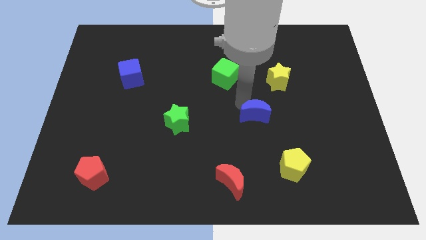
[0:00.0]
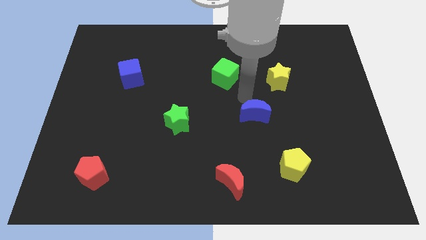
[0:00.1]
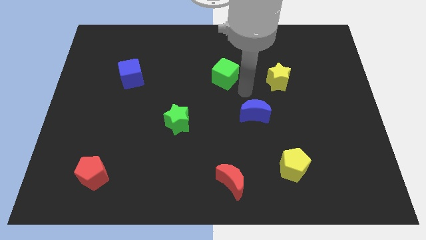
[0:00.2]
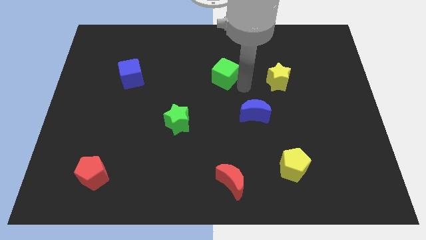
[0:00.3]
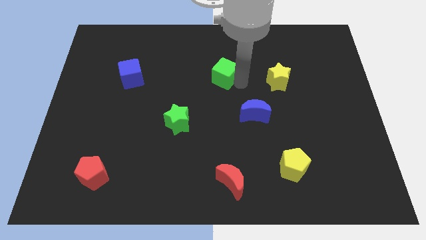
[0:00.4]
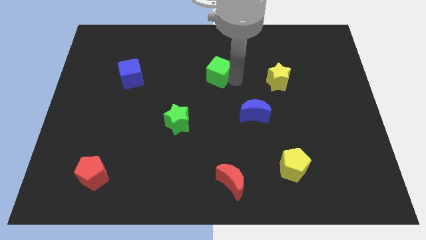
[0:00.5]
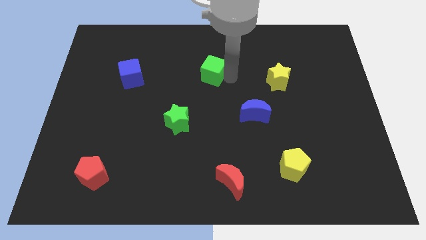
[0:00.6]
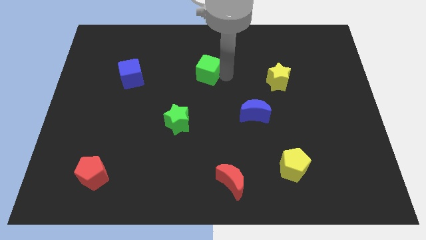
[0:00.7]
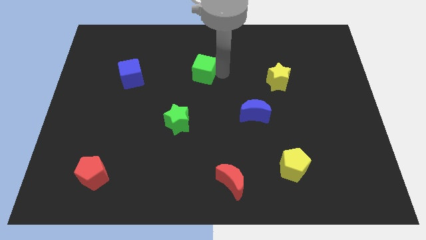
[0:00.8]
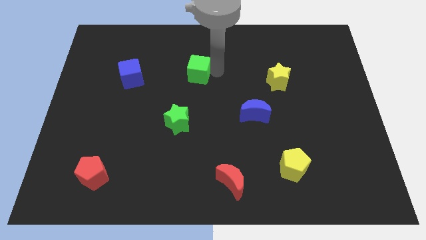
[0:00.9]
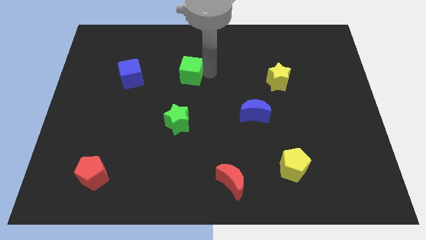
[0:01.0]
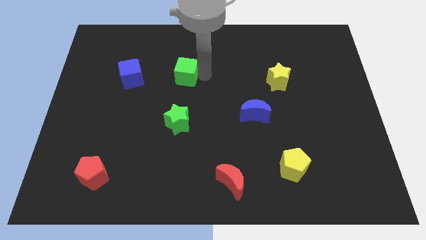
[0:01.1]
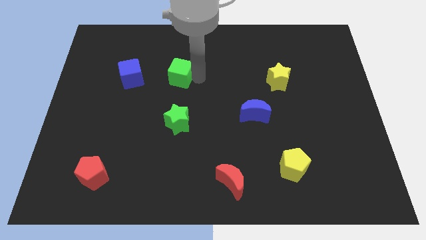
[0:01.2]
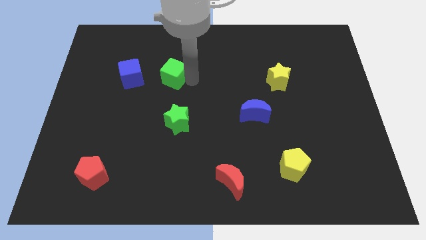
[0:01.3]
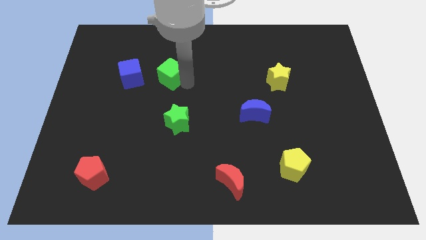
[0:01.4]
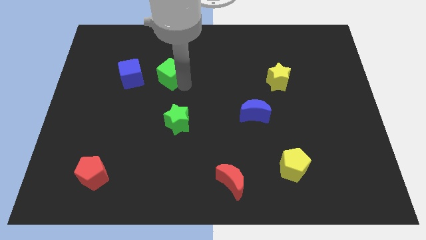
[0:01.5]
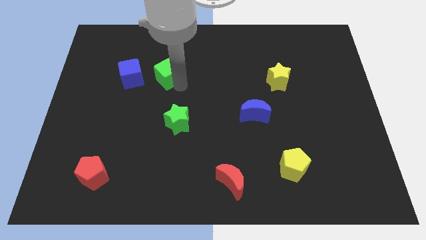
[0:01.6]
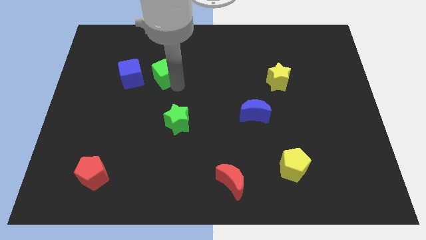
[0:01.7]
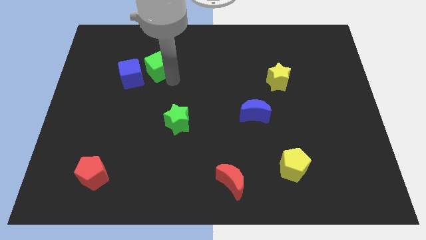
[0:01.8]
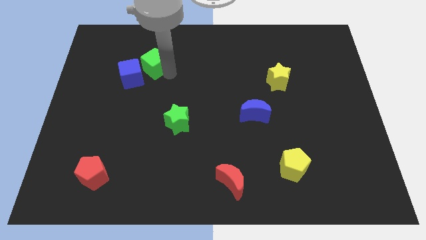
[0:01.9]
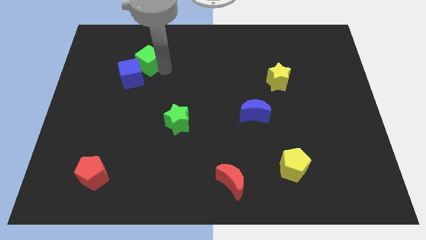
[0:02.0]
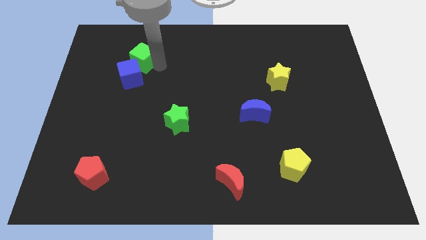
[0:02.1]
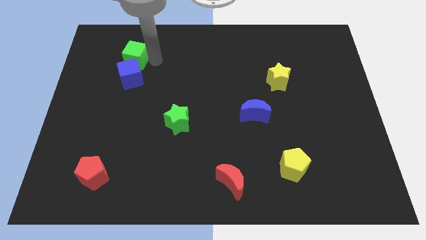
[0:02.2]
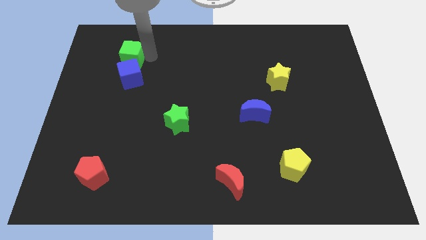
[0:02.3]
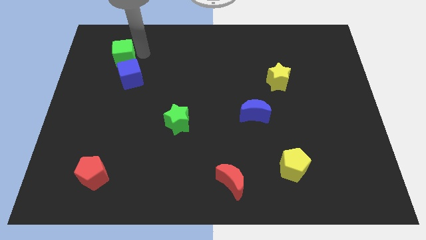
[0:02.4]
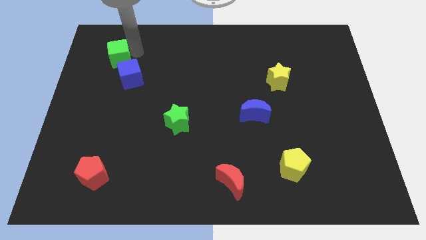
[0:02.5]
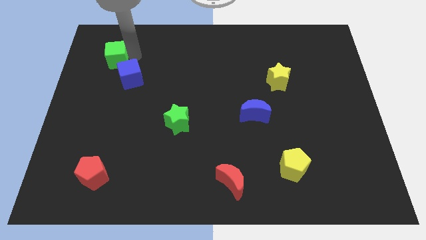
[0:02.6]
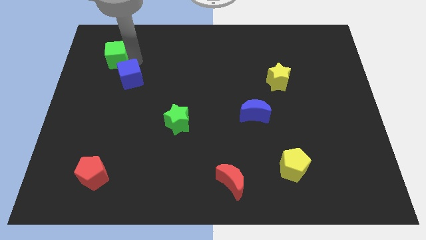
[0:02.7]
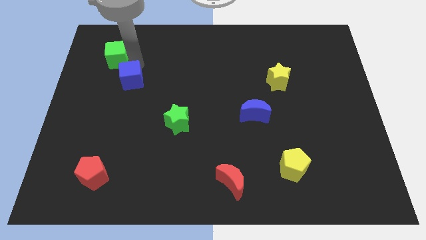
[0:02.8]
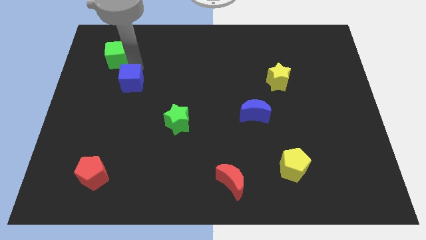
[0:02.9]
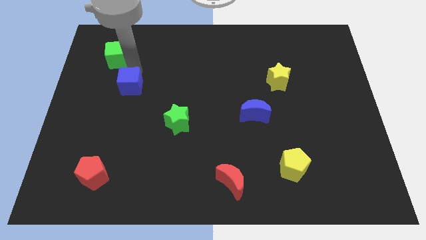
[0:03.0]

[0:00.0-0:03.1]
slide green cube to the top left of blue cube

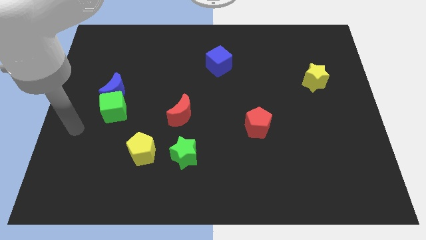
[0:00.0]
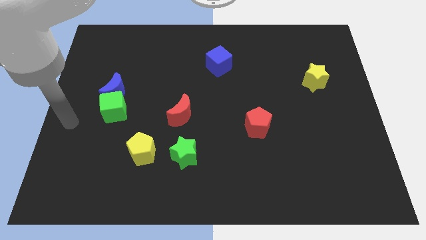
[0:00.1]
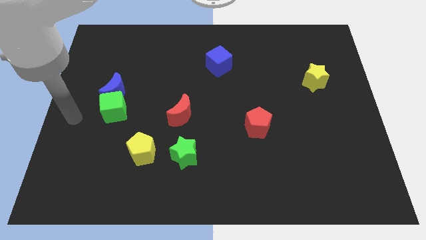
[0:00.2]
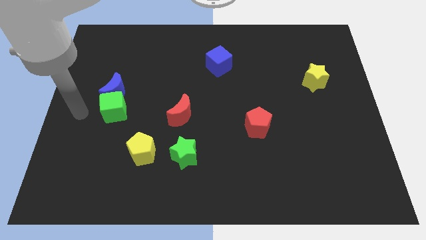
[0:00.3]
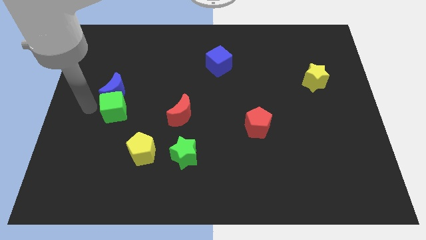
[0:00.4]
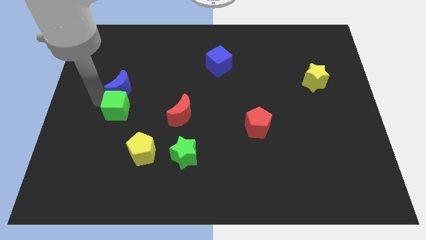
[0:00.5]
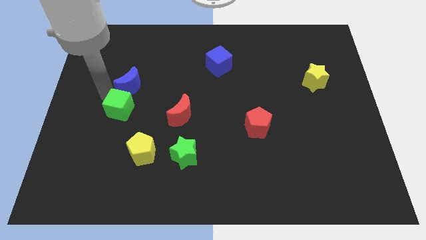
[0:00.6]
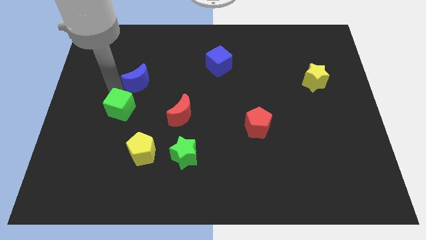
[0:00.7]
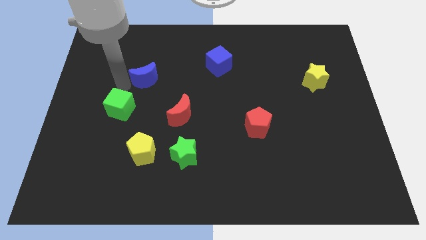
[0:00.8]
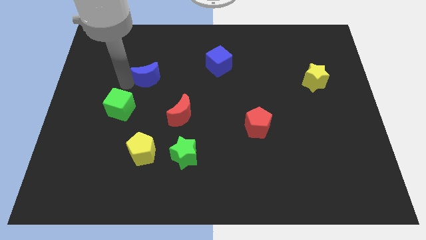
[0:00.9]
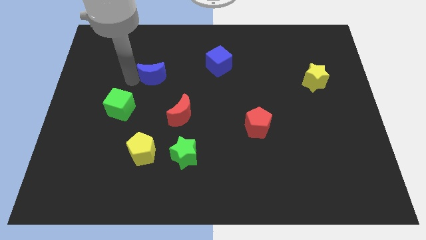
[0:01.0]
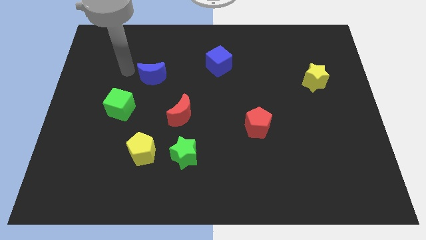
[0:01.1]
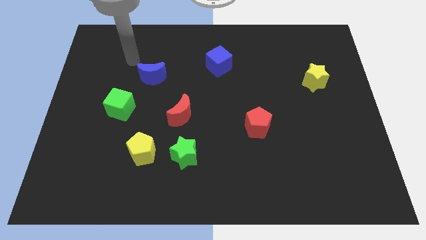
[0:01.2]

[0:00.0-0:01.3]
move the blue crescent left beside the blue cube

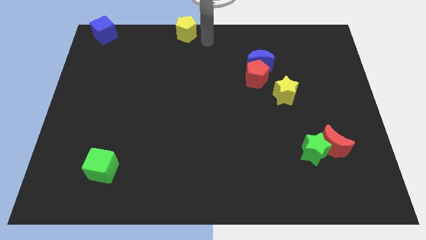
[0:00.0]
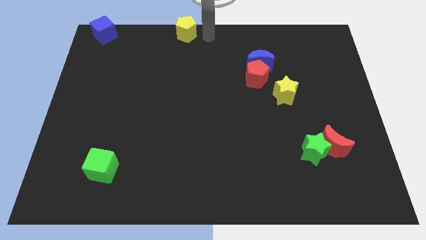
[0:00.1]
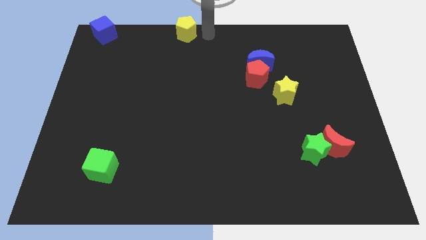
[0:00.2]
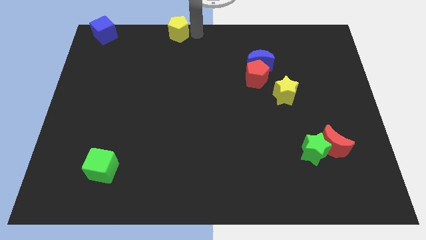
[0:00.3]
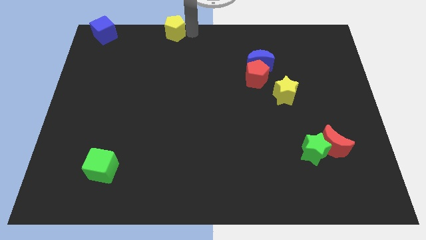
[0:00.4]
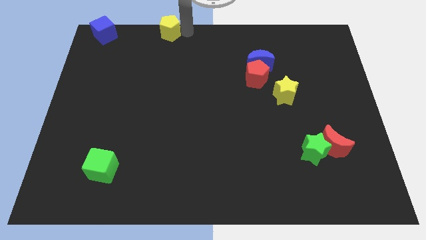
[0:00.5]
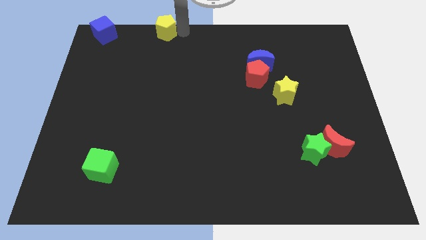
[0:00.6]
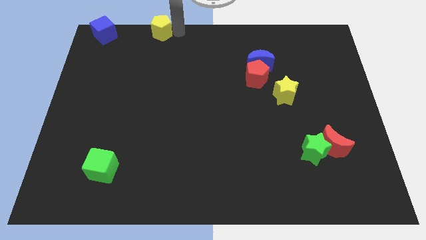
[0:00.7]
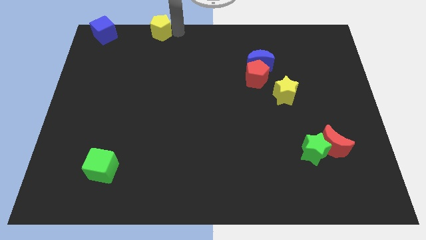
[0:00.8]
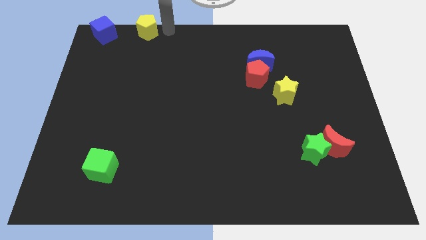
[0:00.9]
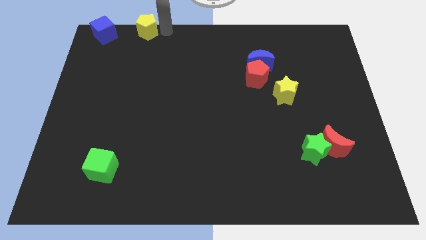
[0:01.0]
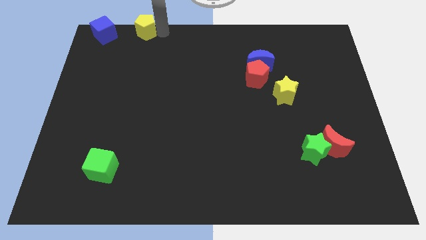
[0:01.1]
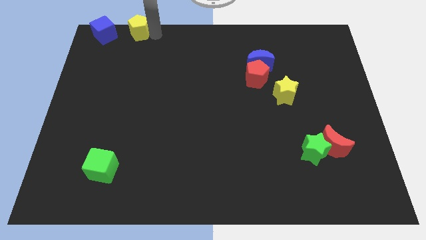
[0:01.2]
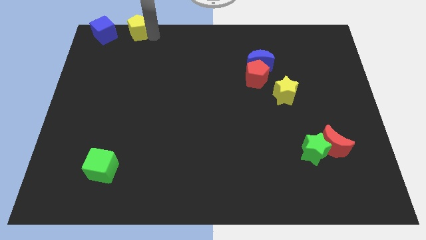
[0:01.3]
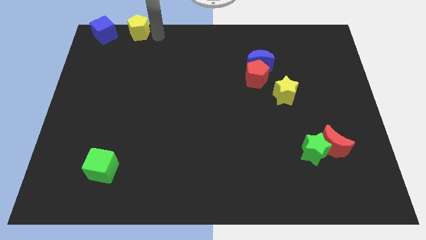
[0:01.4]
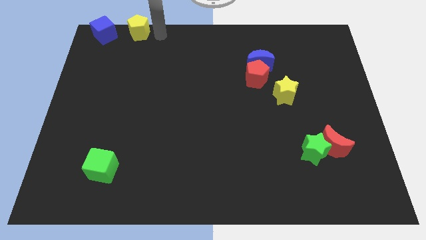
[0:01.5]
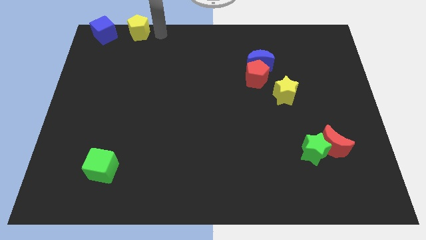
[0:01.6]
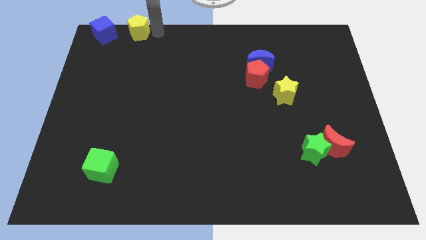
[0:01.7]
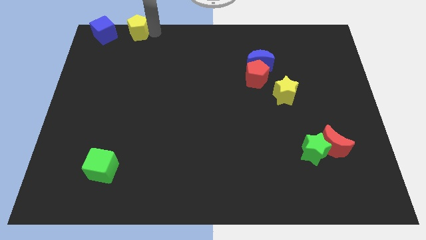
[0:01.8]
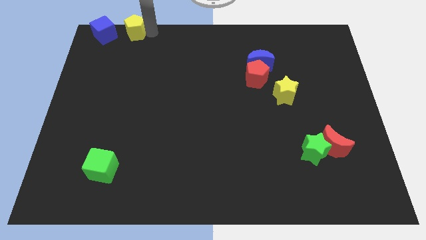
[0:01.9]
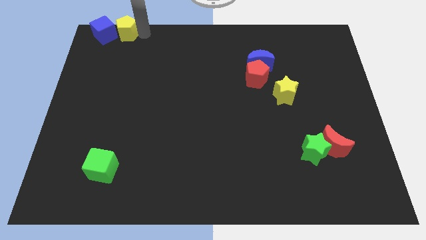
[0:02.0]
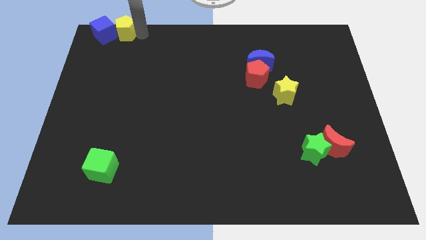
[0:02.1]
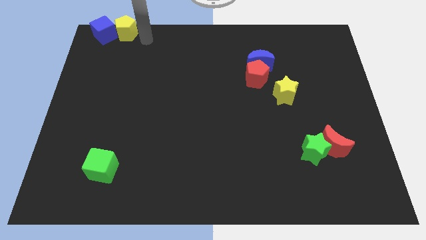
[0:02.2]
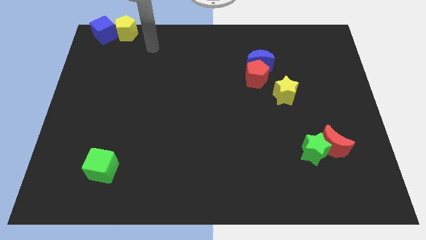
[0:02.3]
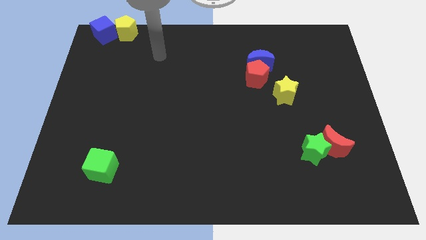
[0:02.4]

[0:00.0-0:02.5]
push the yellow pentagon into the blue cube

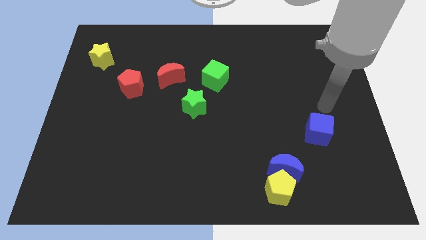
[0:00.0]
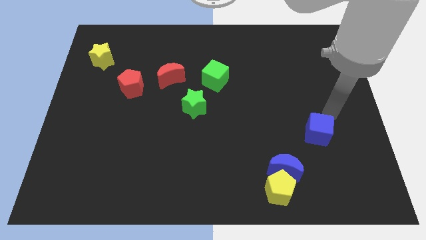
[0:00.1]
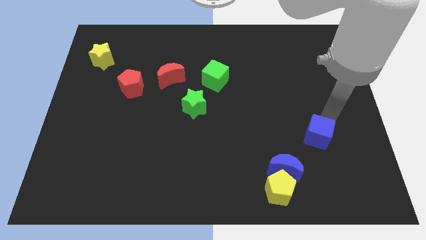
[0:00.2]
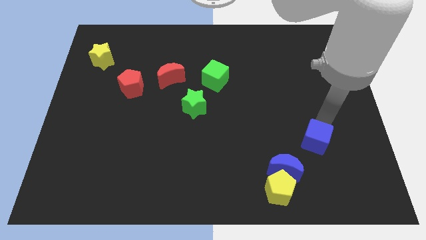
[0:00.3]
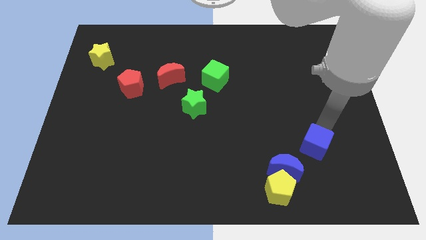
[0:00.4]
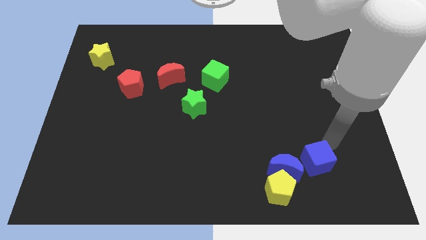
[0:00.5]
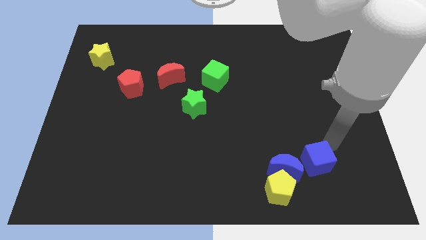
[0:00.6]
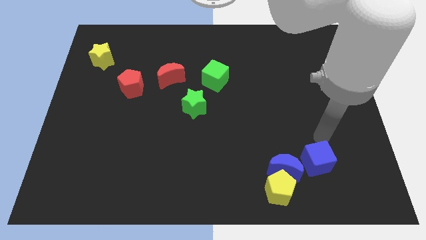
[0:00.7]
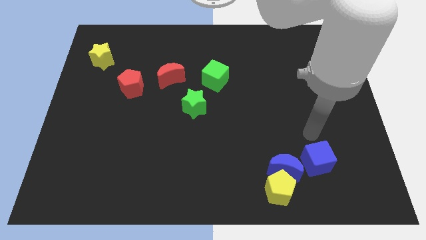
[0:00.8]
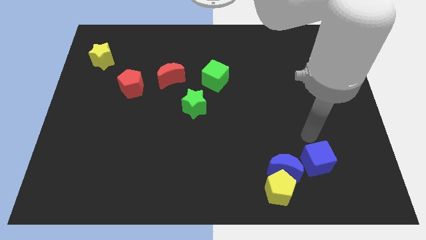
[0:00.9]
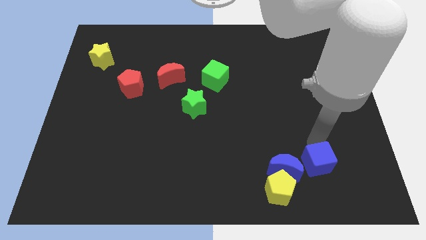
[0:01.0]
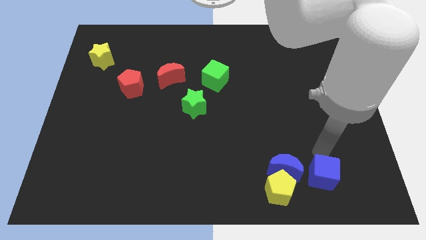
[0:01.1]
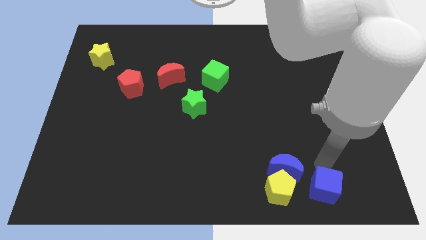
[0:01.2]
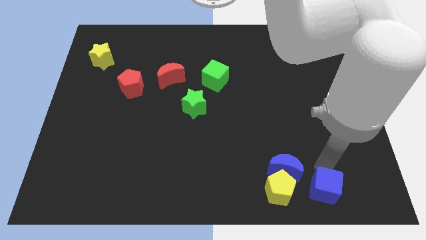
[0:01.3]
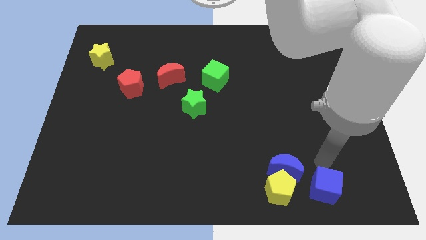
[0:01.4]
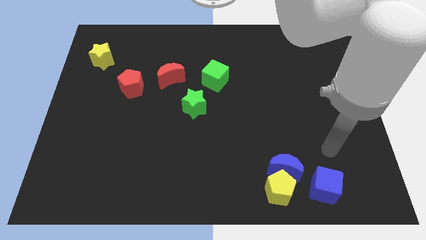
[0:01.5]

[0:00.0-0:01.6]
move the blue cube to the right of the blue crescent

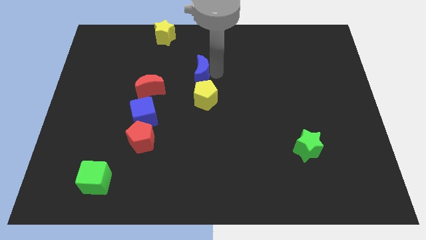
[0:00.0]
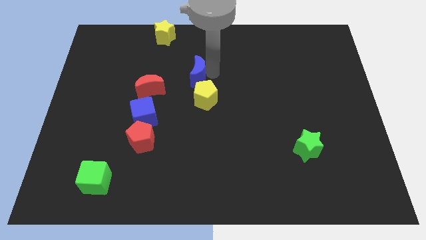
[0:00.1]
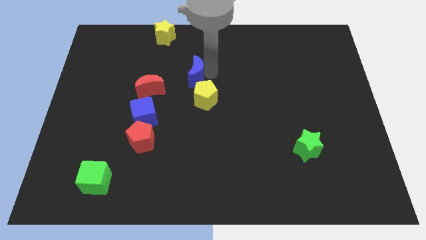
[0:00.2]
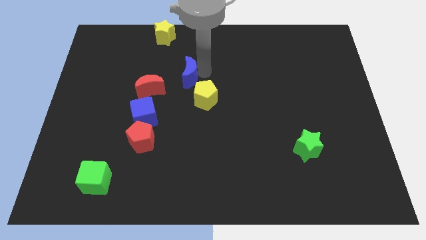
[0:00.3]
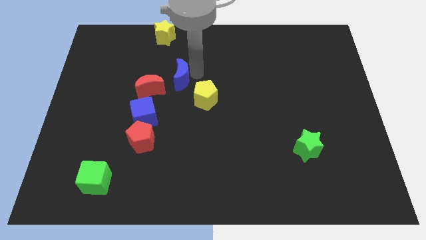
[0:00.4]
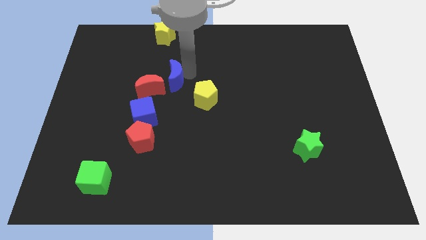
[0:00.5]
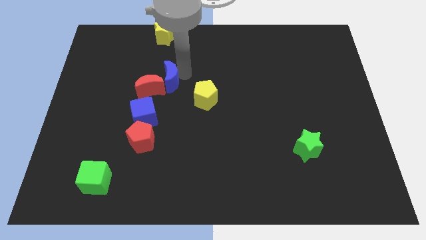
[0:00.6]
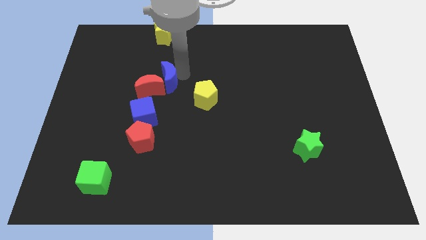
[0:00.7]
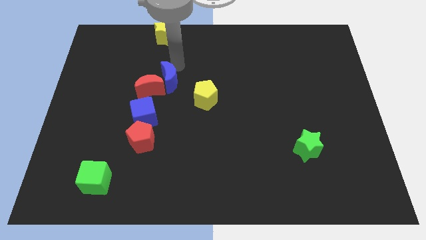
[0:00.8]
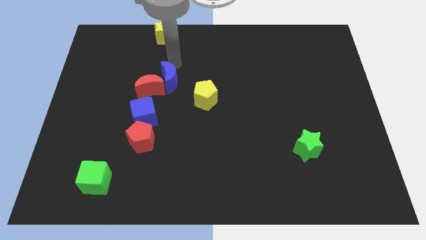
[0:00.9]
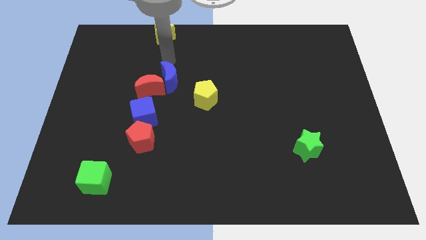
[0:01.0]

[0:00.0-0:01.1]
separate blue moon from yellow pentagon
